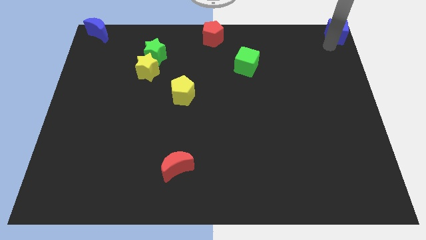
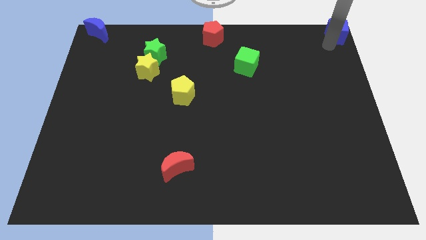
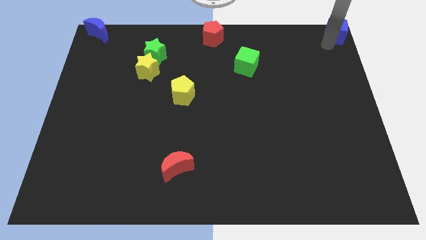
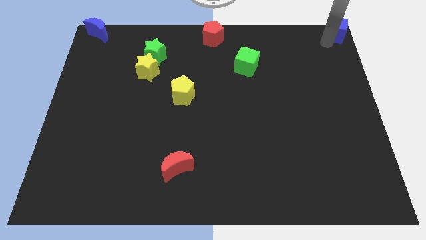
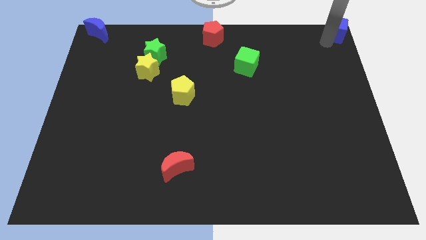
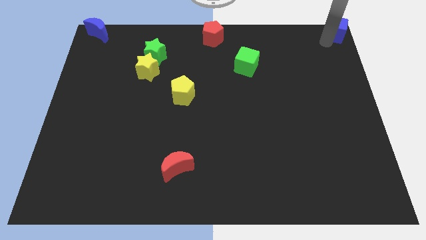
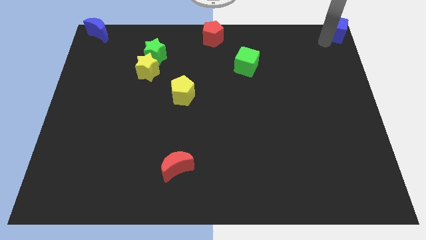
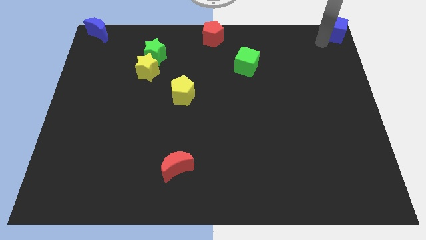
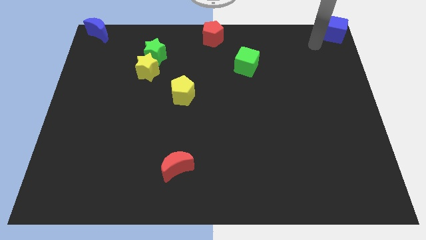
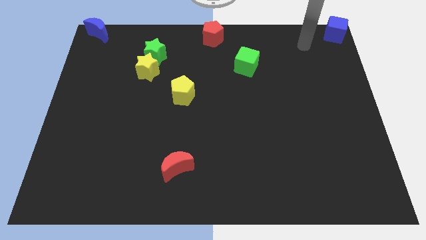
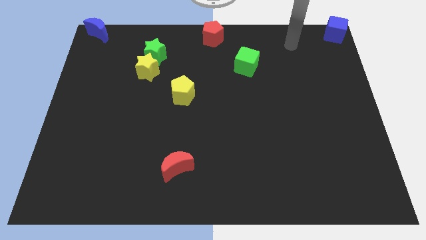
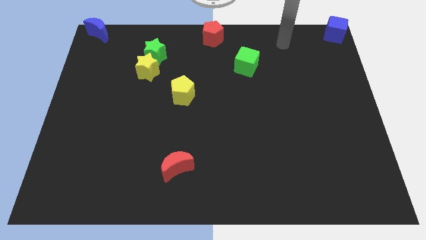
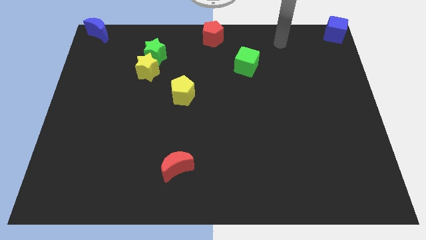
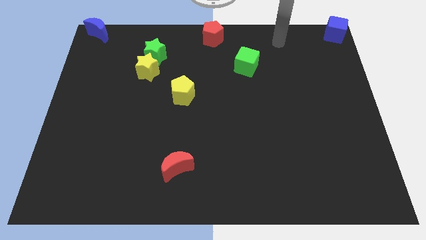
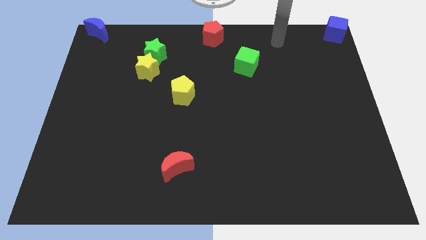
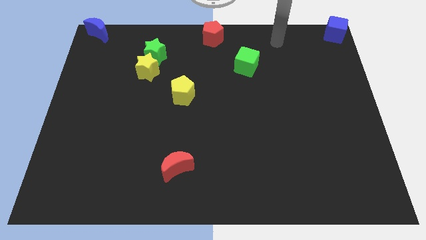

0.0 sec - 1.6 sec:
move the arm away from the blue cube

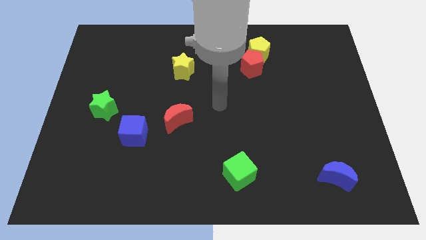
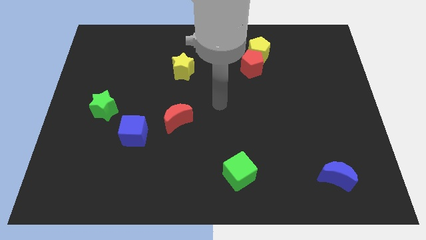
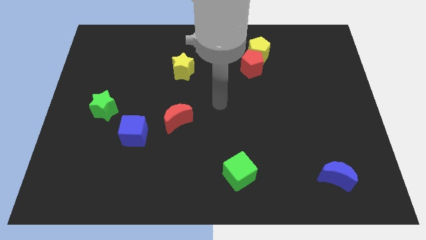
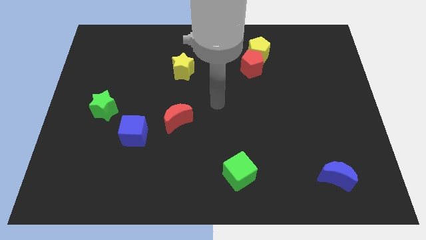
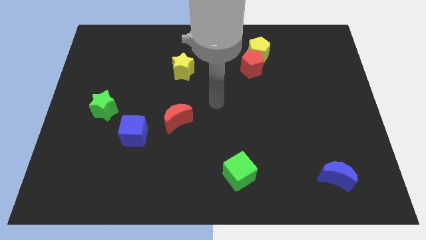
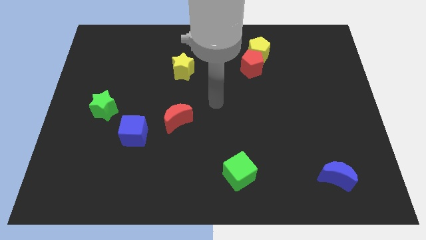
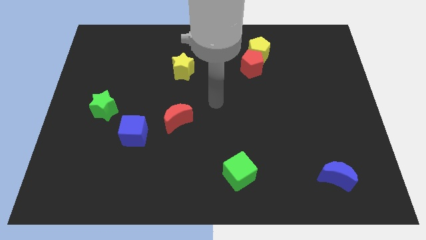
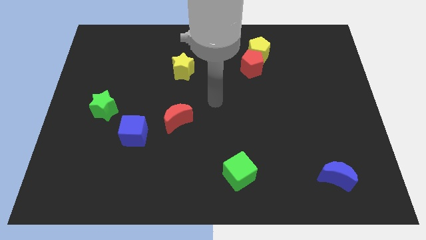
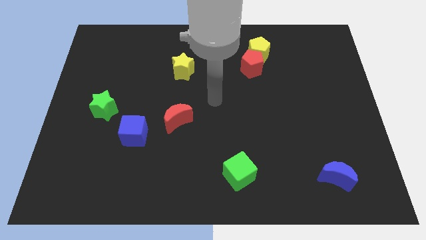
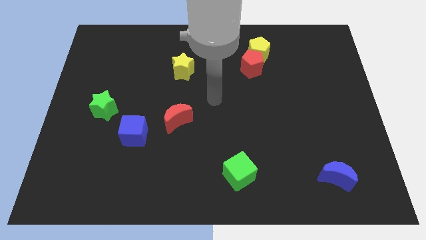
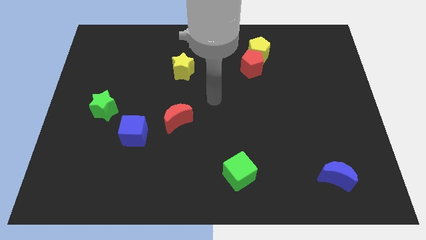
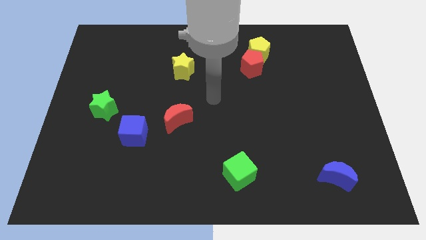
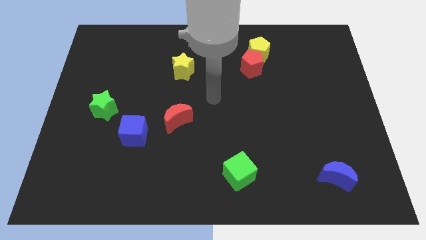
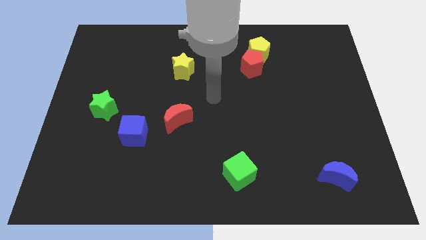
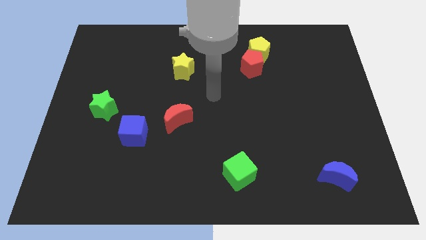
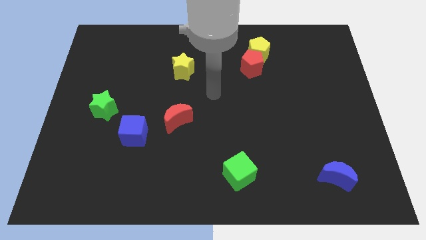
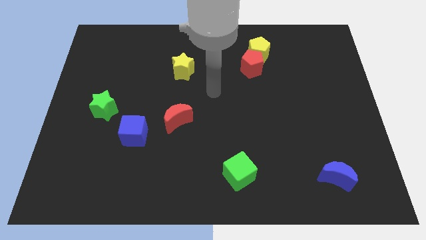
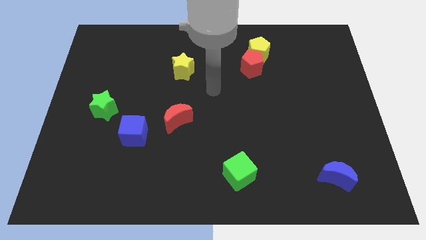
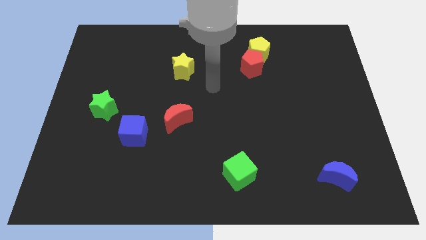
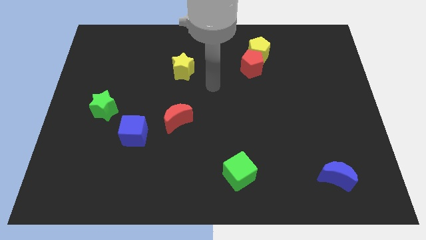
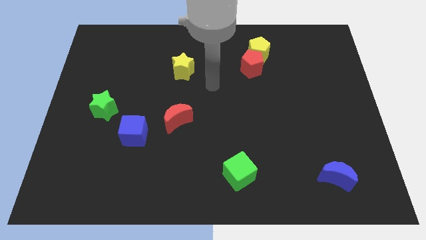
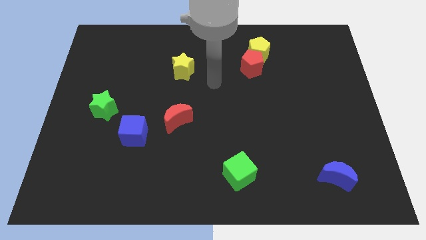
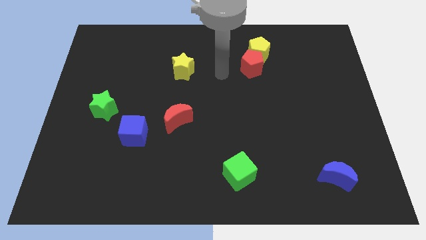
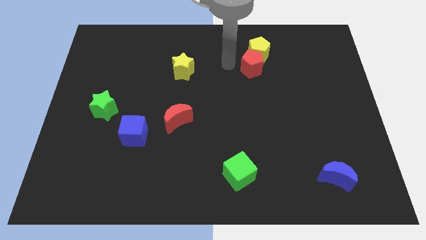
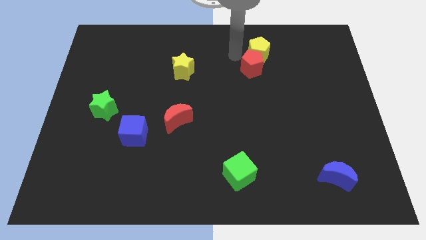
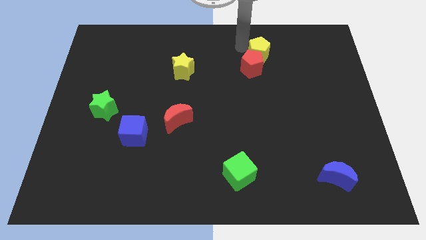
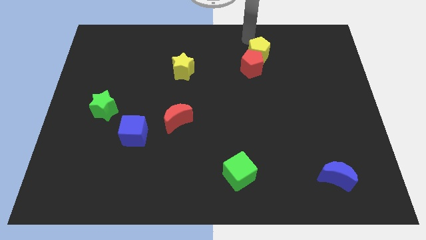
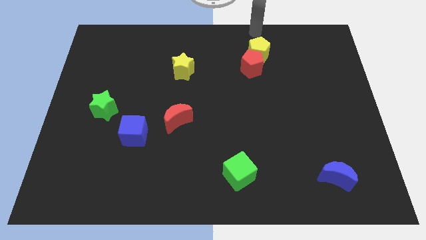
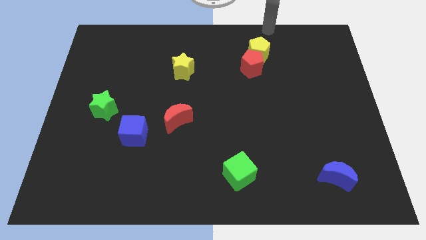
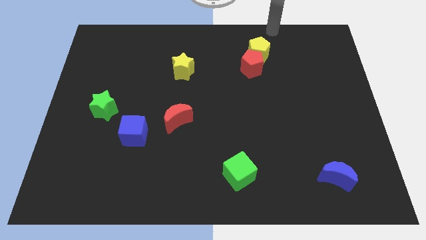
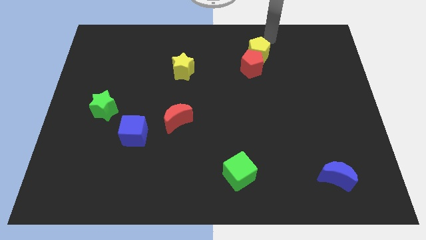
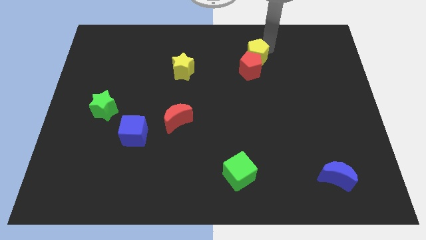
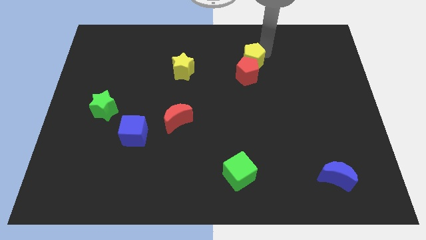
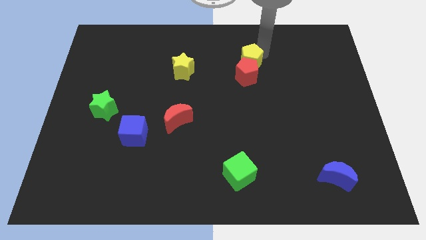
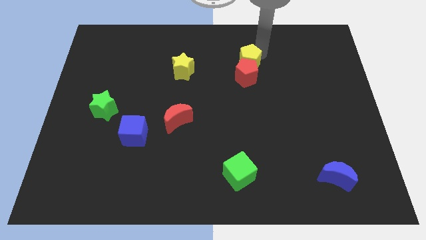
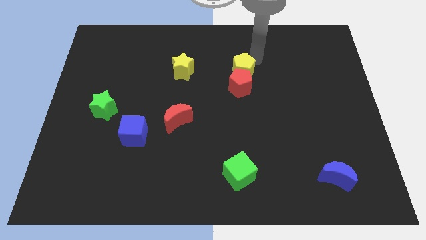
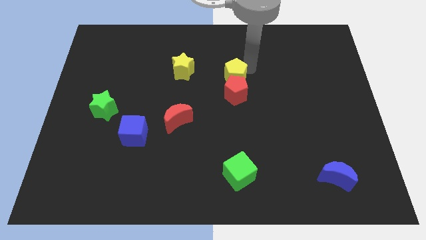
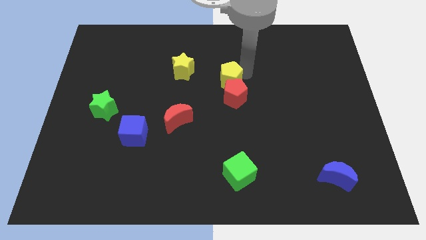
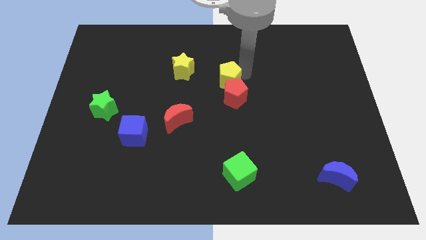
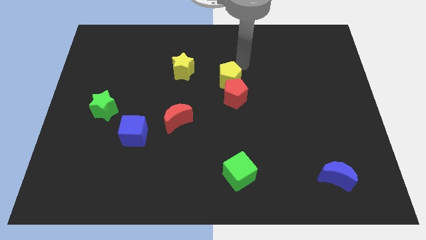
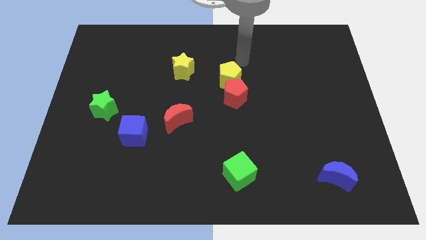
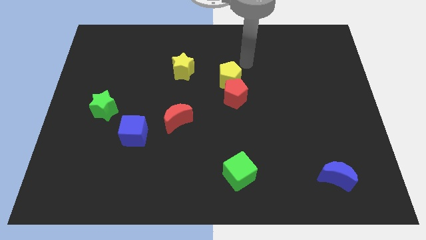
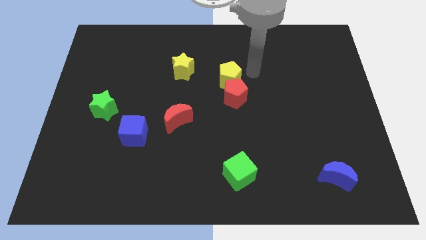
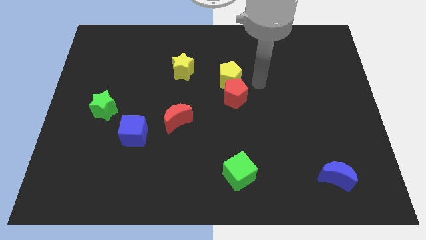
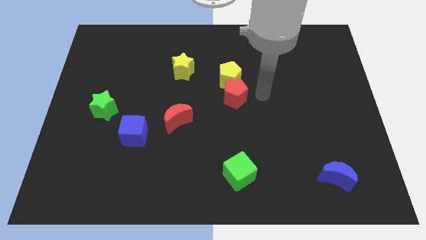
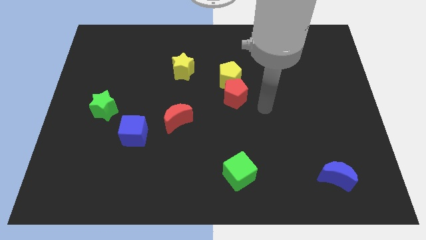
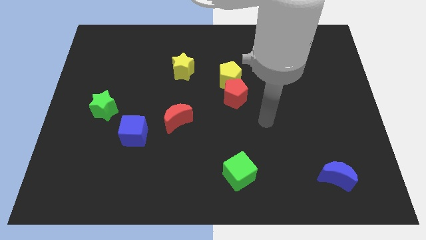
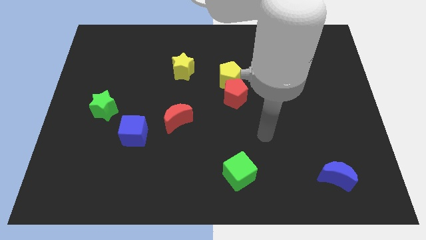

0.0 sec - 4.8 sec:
push yellow pentagon with red pentagon to center of the board

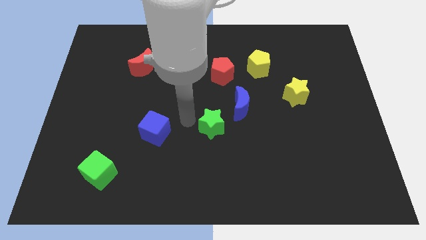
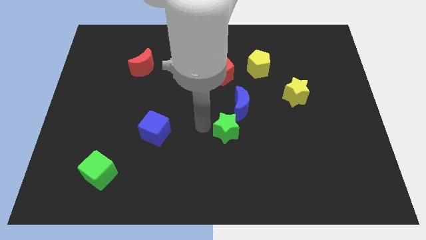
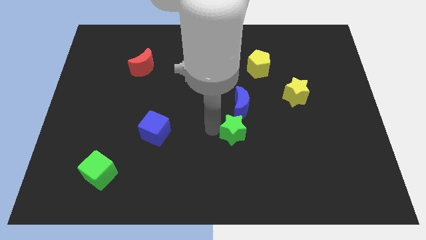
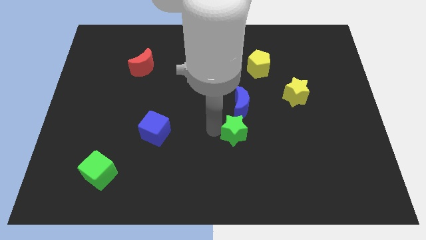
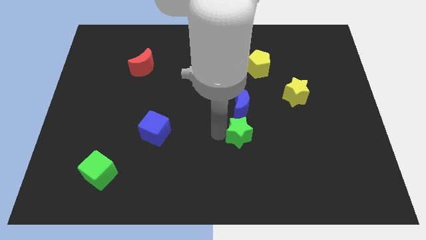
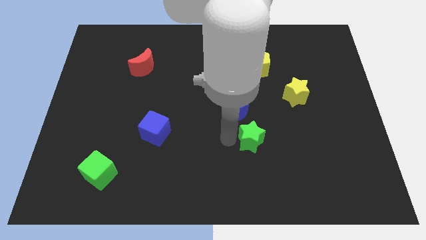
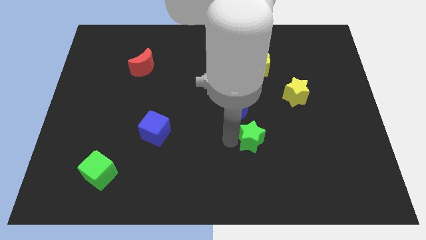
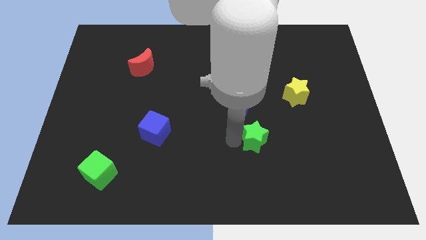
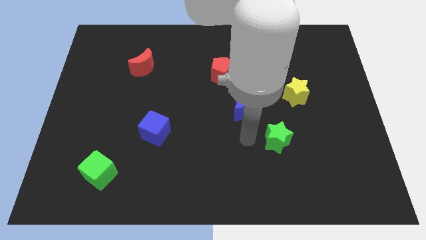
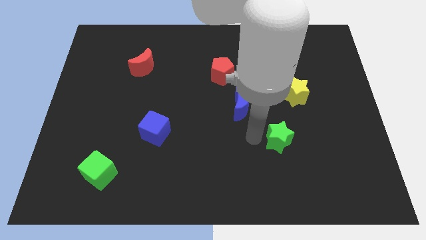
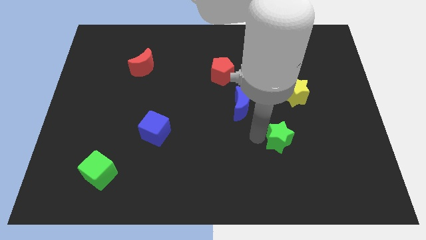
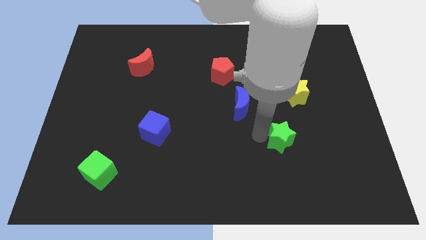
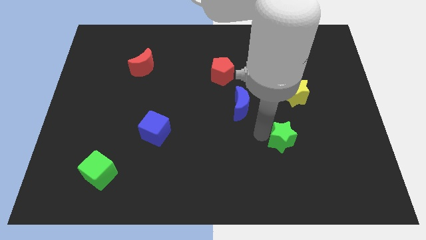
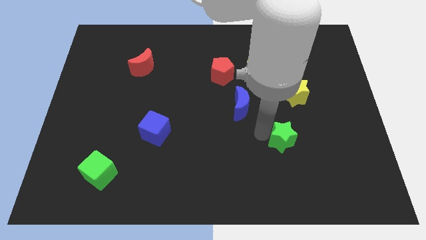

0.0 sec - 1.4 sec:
push the green star towards the bottom right of blue crescent

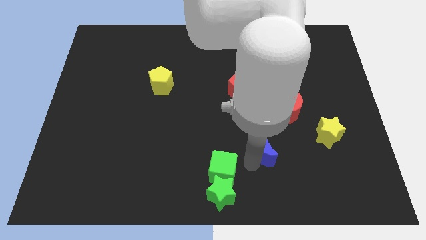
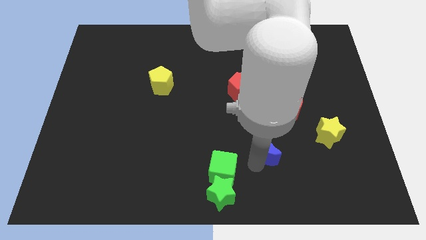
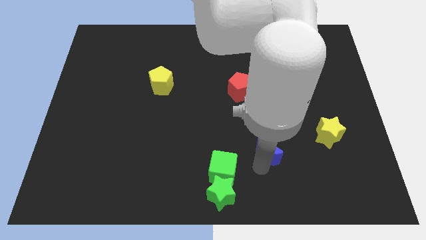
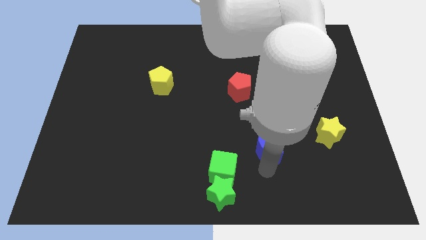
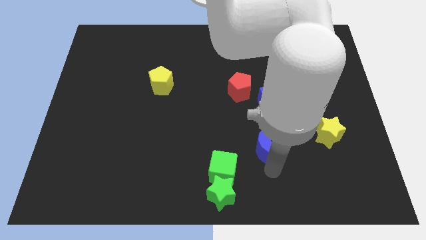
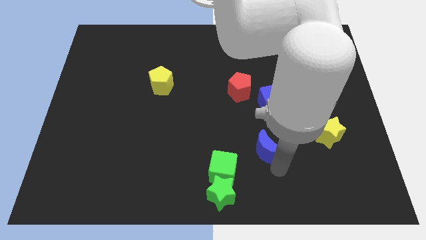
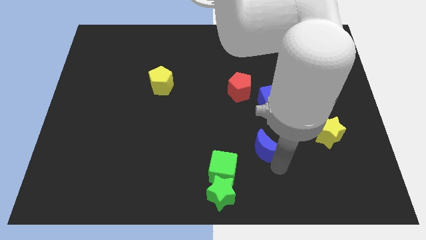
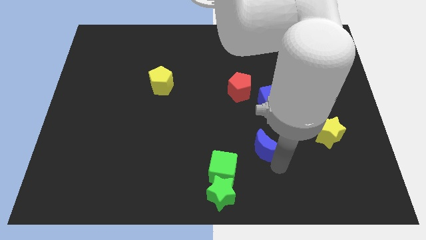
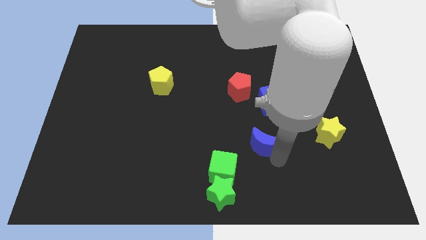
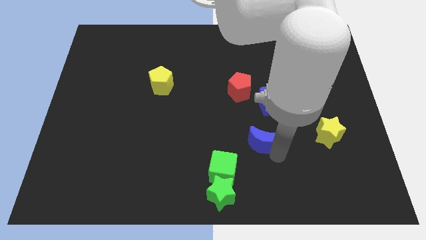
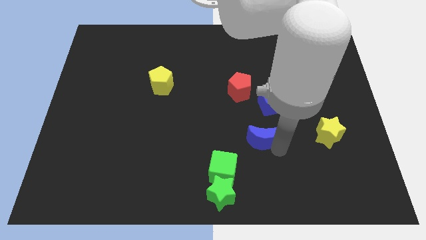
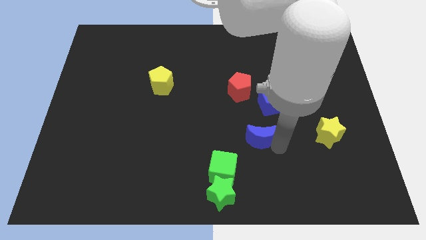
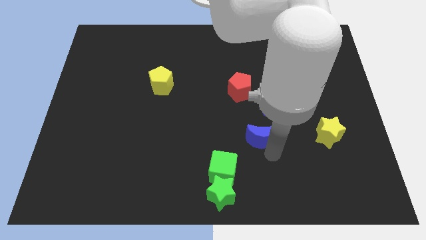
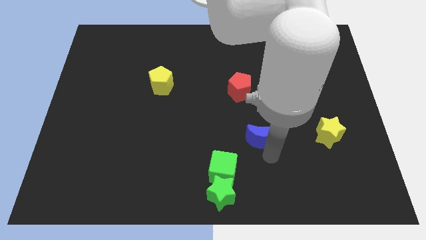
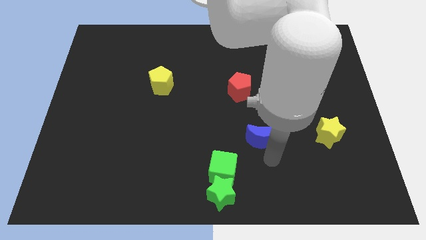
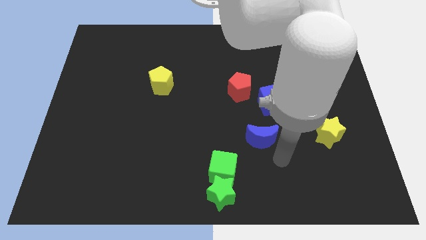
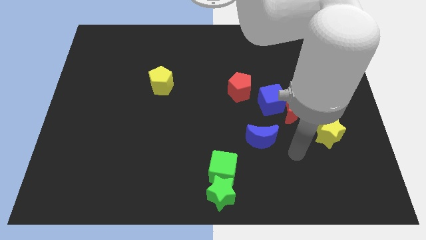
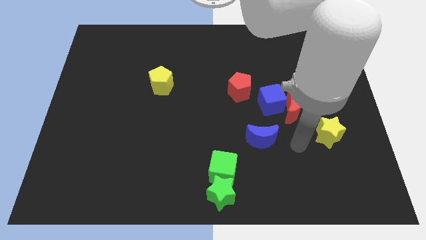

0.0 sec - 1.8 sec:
move the blue crescent towards the blue cube
